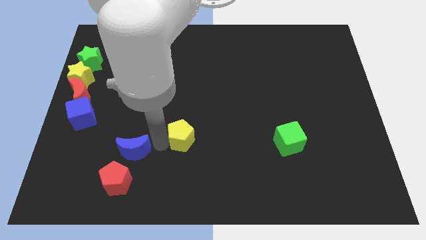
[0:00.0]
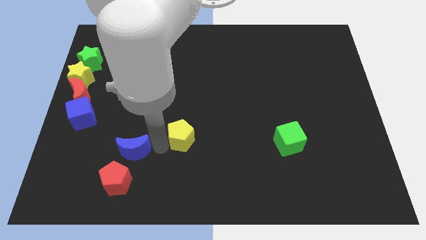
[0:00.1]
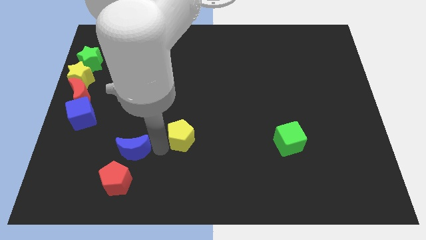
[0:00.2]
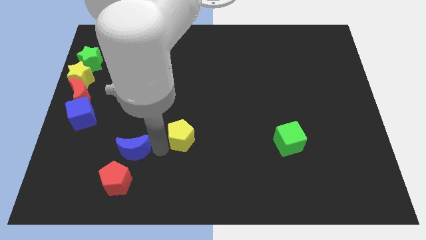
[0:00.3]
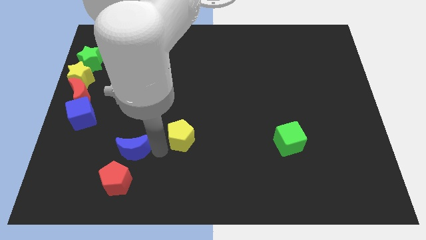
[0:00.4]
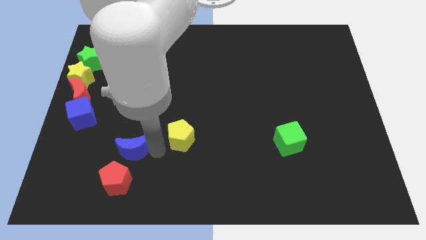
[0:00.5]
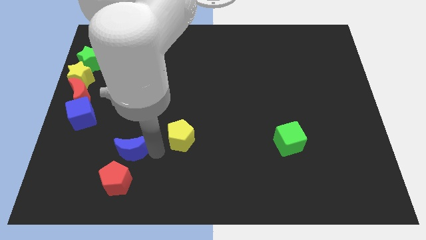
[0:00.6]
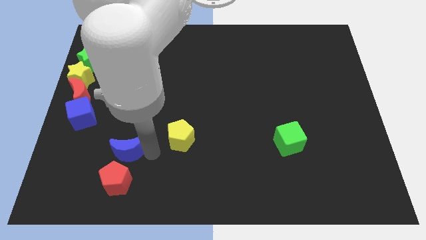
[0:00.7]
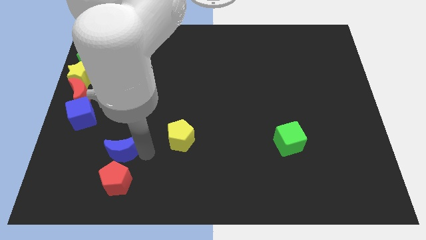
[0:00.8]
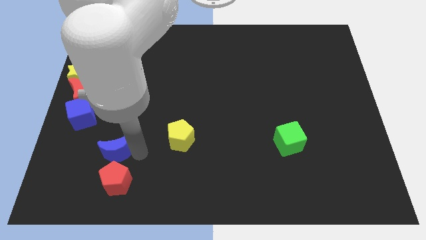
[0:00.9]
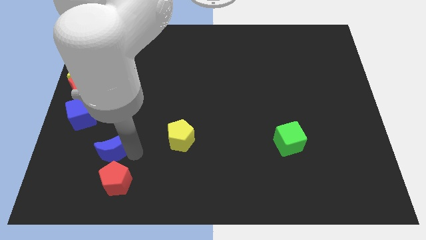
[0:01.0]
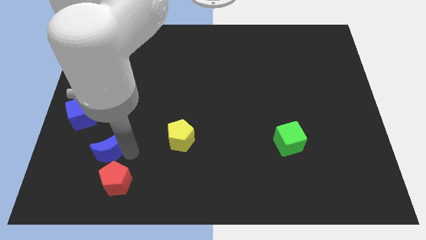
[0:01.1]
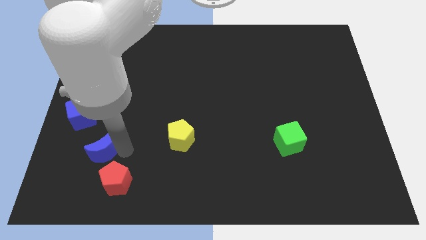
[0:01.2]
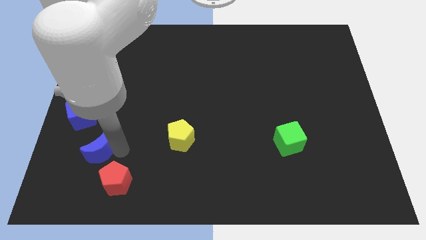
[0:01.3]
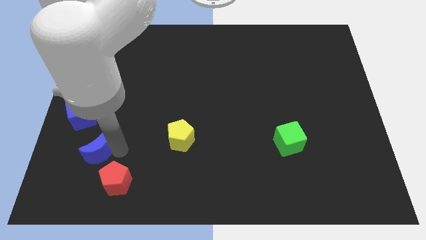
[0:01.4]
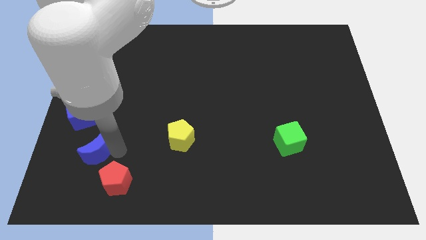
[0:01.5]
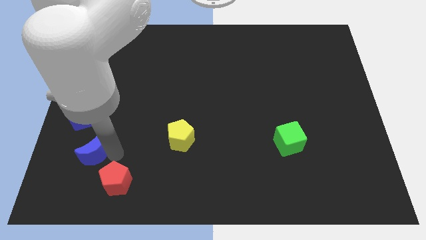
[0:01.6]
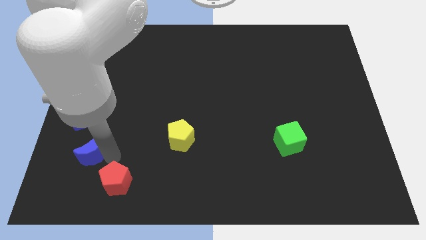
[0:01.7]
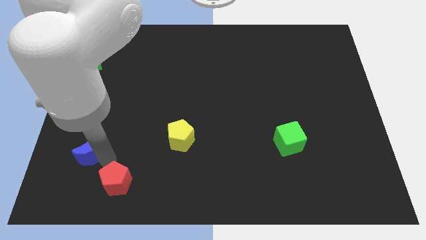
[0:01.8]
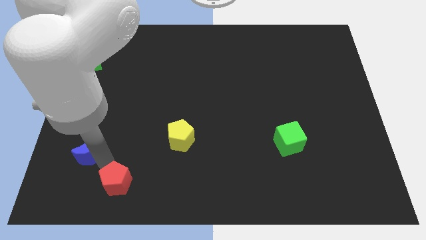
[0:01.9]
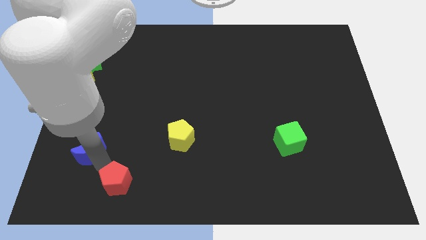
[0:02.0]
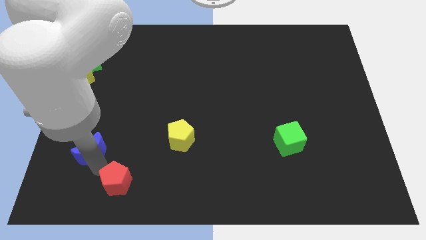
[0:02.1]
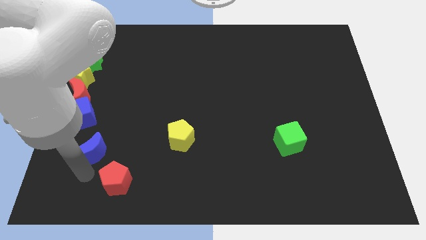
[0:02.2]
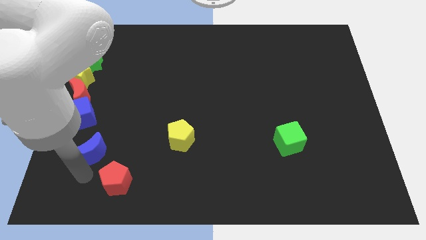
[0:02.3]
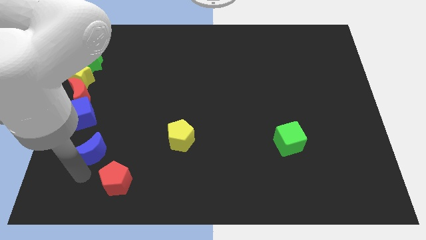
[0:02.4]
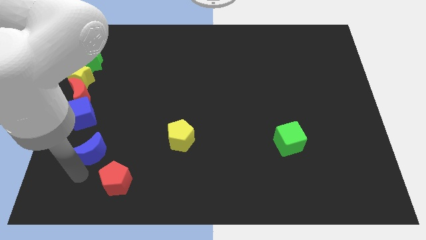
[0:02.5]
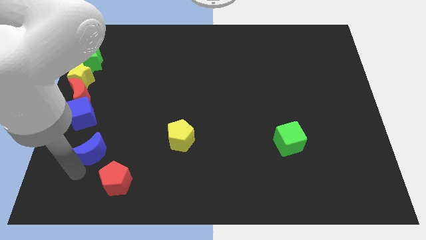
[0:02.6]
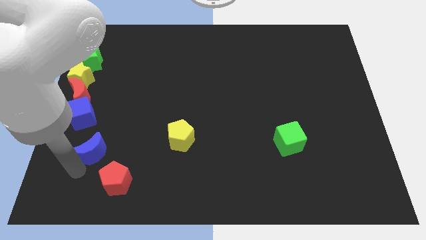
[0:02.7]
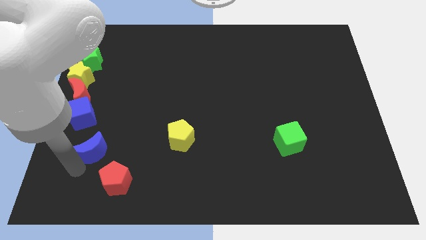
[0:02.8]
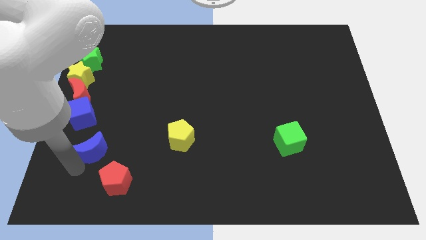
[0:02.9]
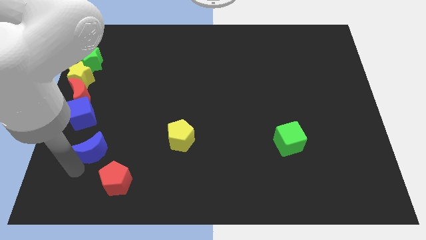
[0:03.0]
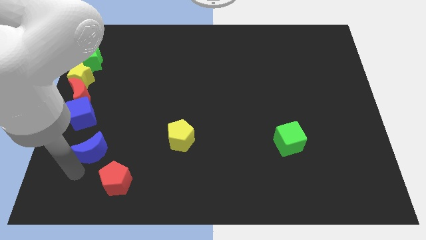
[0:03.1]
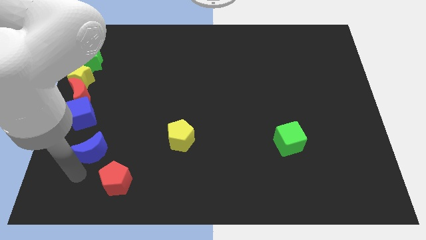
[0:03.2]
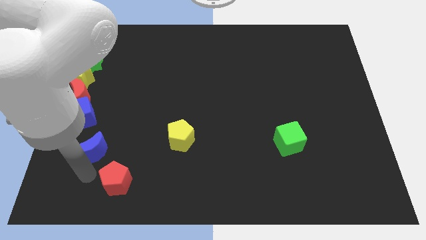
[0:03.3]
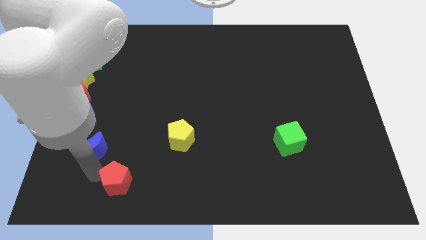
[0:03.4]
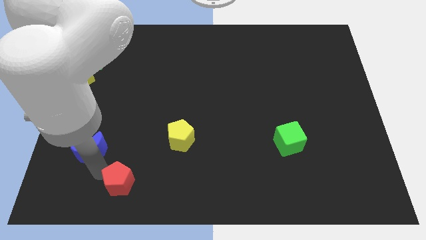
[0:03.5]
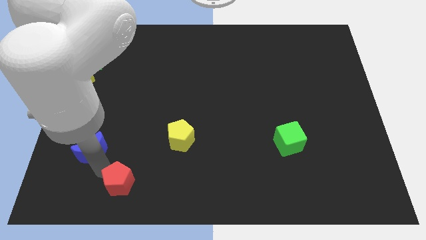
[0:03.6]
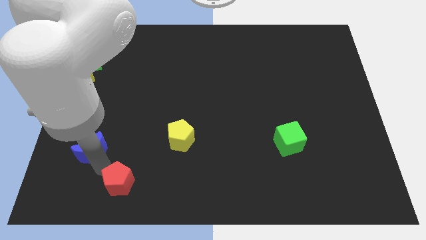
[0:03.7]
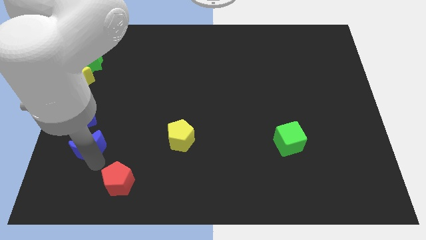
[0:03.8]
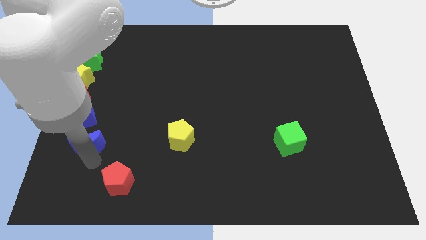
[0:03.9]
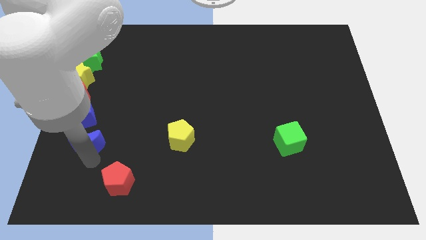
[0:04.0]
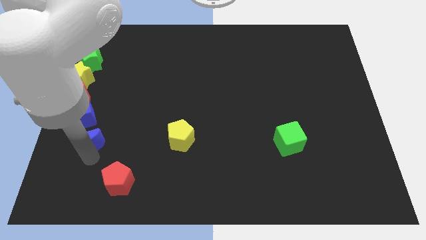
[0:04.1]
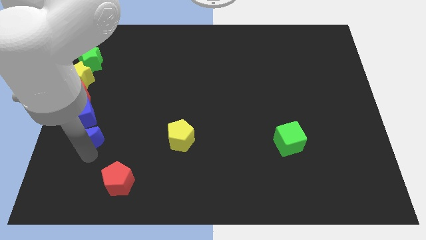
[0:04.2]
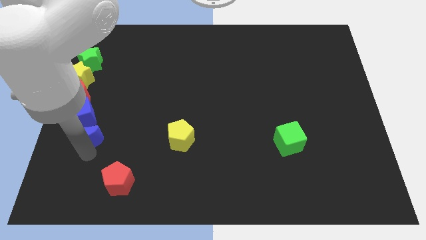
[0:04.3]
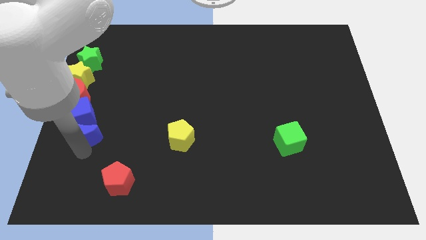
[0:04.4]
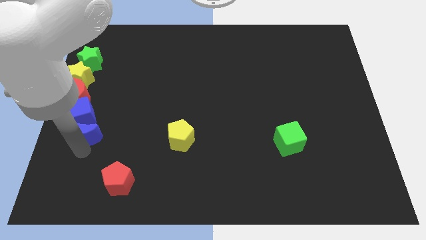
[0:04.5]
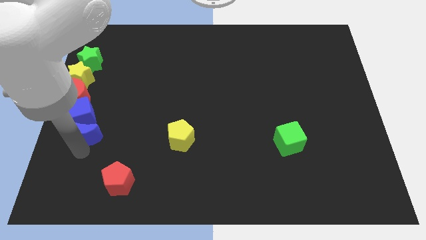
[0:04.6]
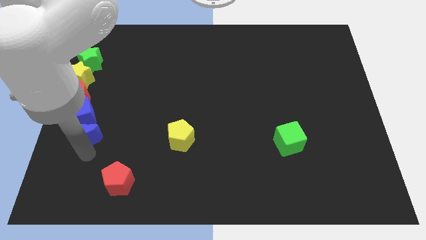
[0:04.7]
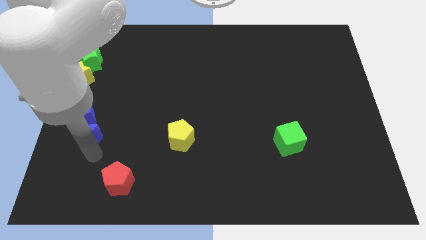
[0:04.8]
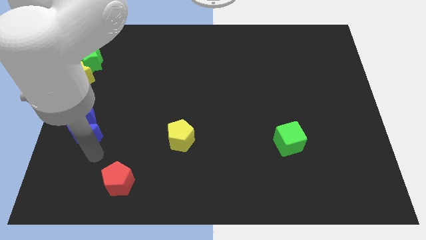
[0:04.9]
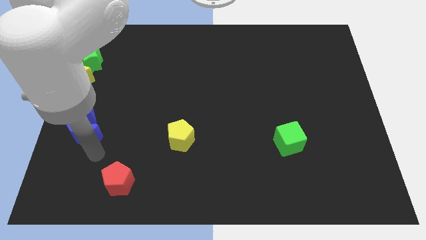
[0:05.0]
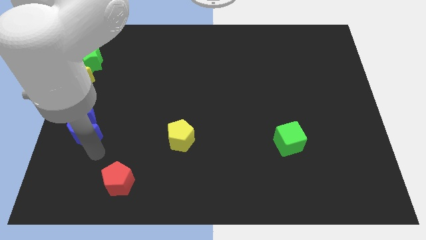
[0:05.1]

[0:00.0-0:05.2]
push the blue moon to the bottom of the blue cube

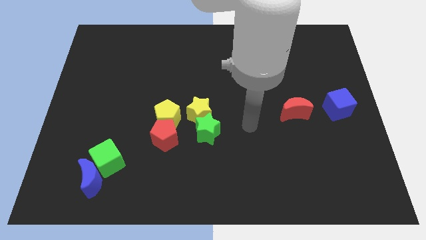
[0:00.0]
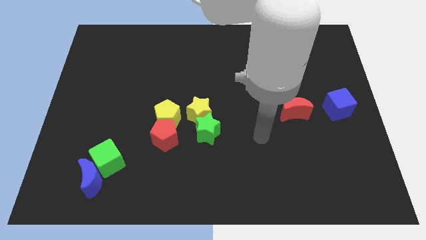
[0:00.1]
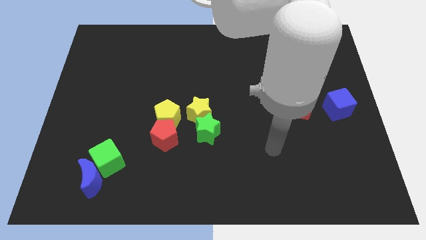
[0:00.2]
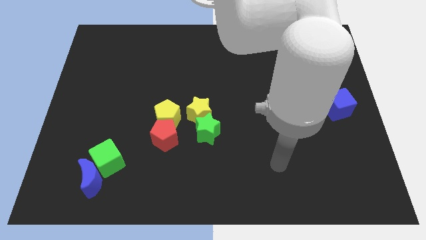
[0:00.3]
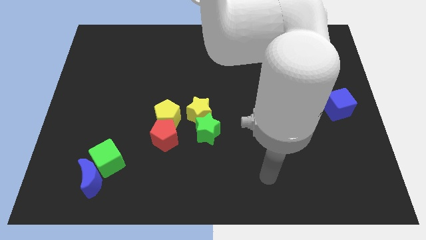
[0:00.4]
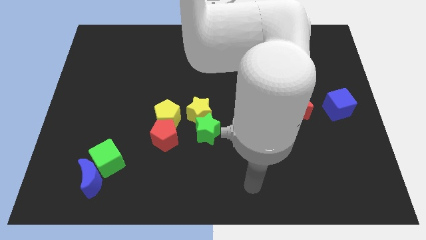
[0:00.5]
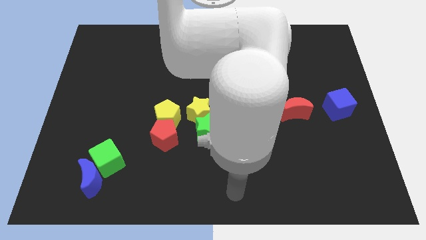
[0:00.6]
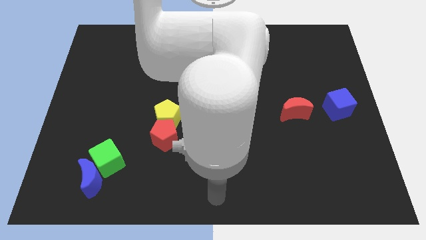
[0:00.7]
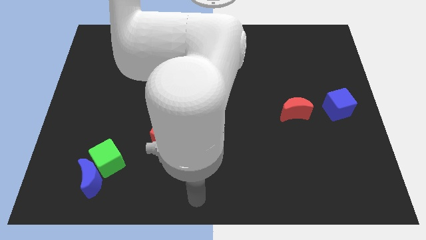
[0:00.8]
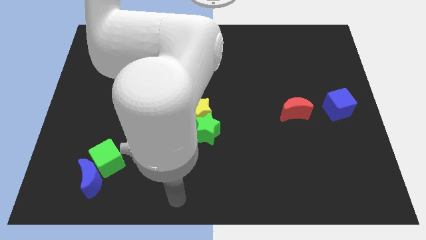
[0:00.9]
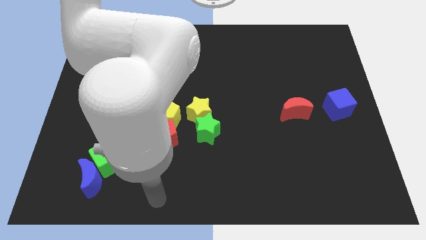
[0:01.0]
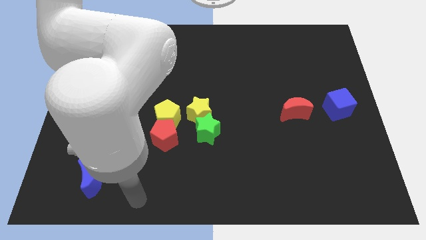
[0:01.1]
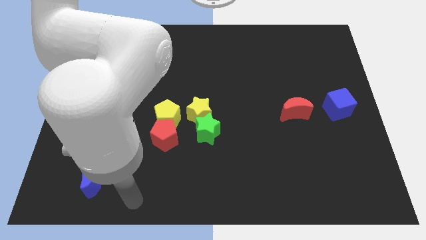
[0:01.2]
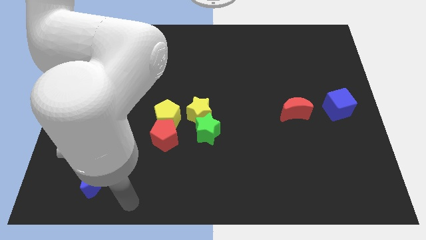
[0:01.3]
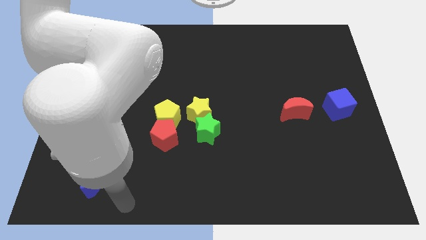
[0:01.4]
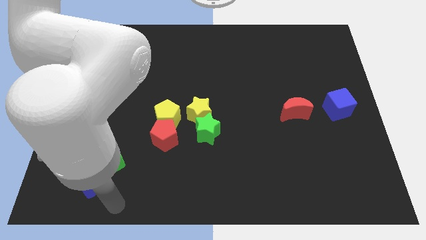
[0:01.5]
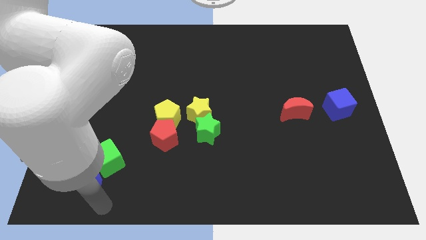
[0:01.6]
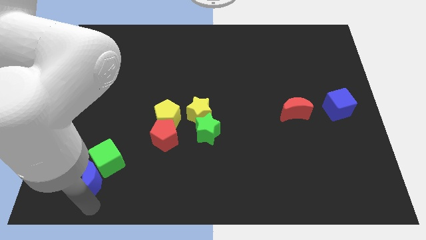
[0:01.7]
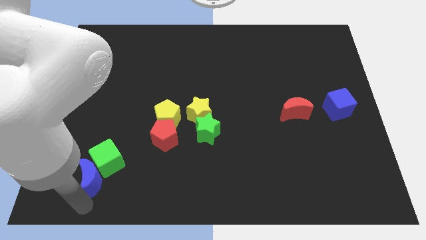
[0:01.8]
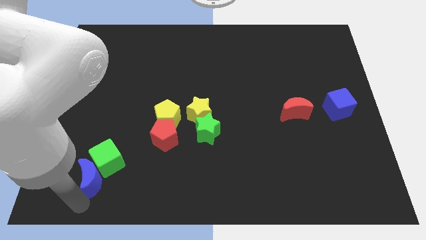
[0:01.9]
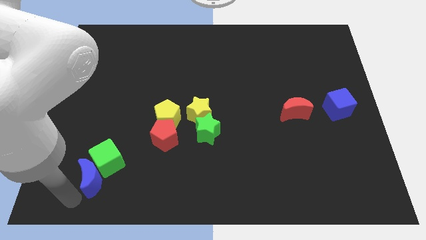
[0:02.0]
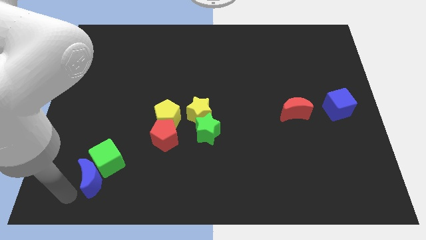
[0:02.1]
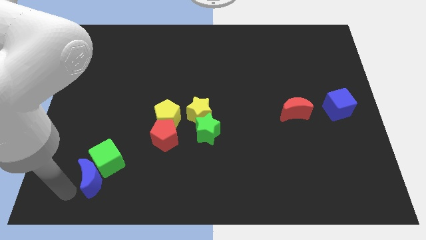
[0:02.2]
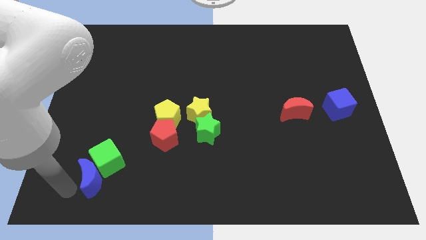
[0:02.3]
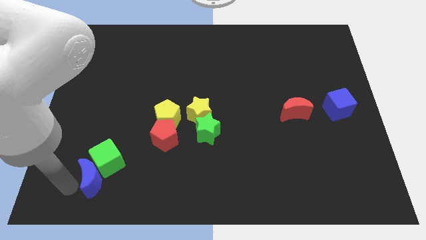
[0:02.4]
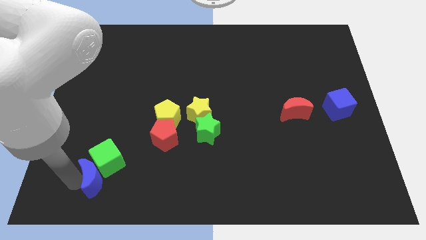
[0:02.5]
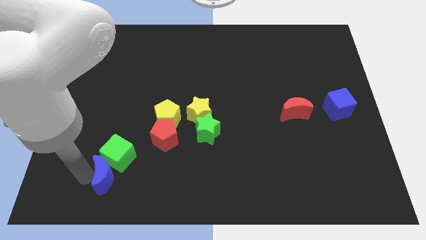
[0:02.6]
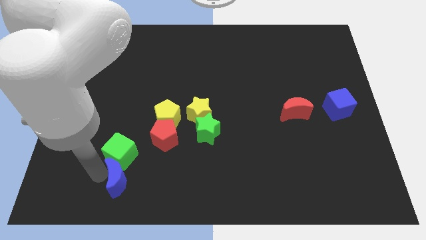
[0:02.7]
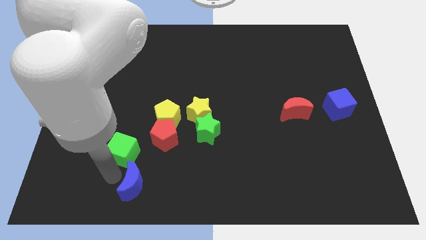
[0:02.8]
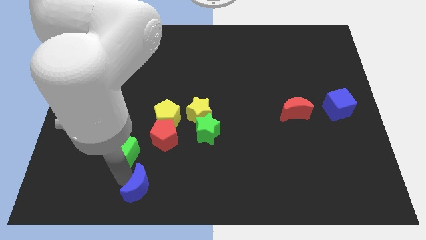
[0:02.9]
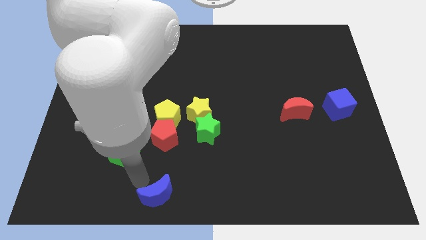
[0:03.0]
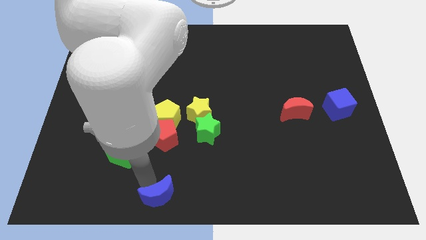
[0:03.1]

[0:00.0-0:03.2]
push the blue moon towards the bottom center

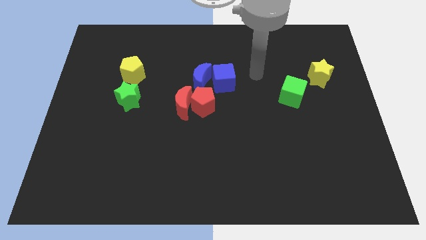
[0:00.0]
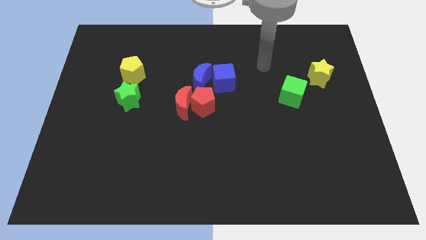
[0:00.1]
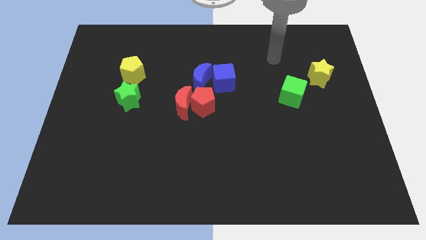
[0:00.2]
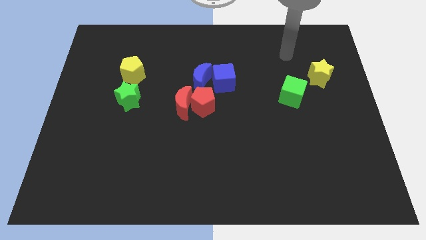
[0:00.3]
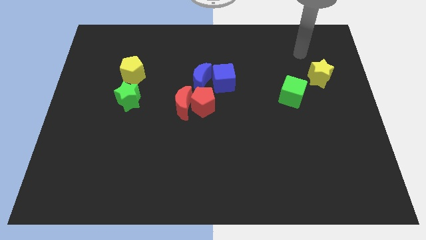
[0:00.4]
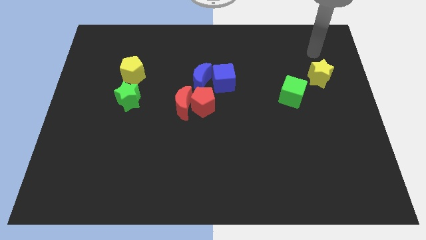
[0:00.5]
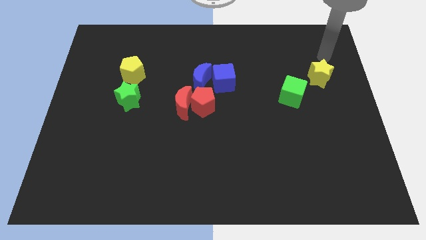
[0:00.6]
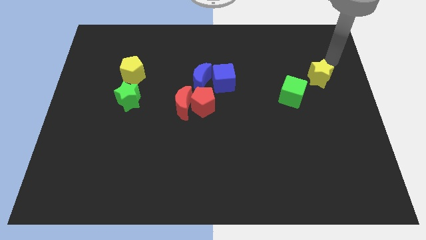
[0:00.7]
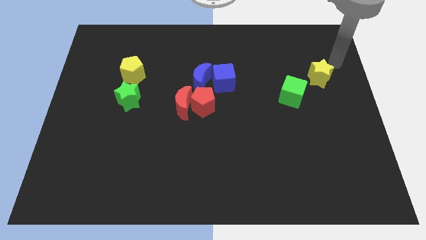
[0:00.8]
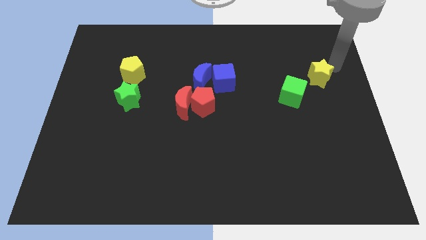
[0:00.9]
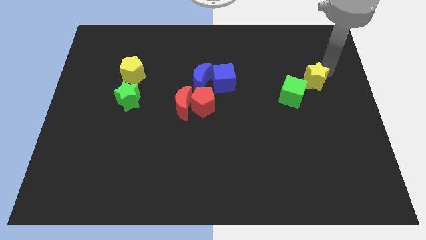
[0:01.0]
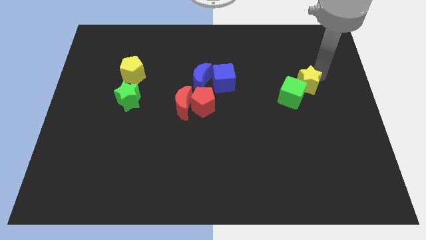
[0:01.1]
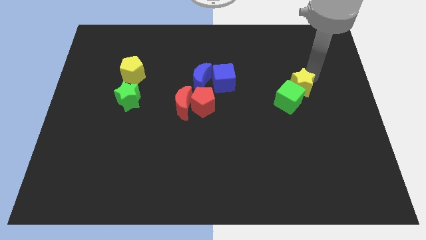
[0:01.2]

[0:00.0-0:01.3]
push the yellow star into the green cube
